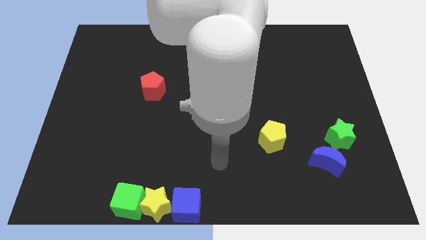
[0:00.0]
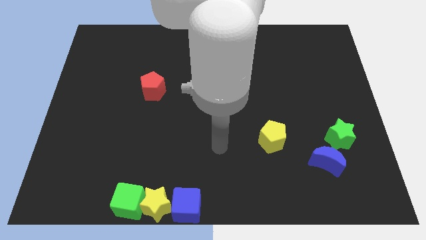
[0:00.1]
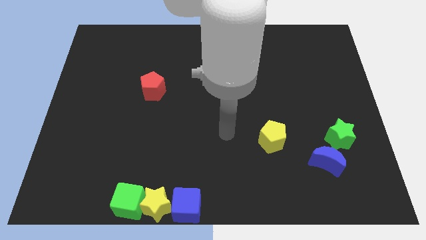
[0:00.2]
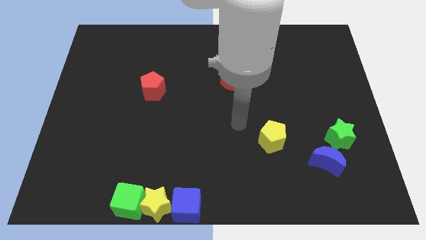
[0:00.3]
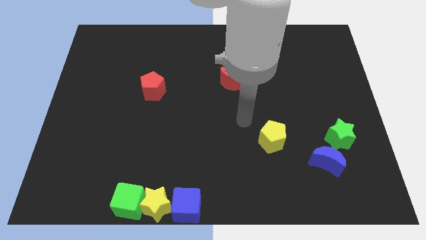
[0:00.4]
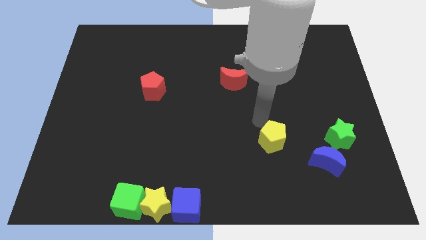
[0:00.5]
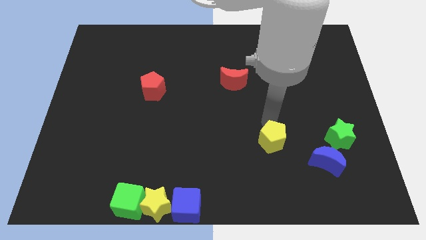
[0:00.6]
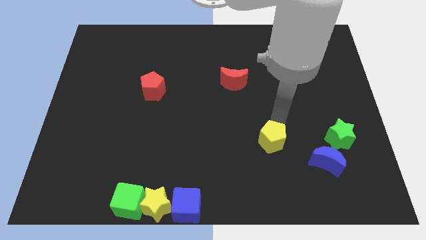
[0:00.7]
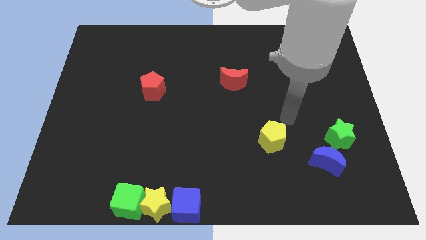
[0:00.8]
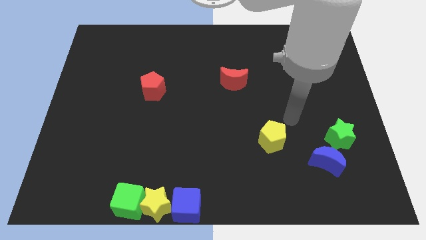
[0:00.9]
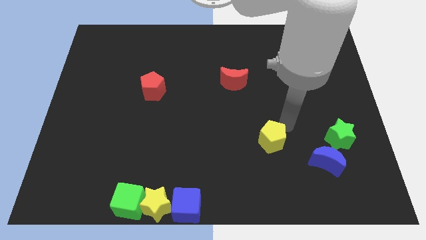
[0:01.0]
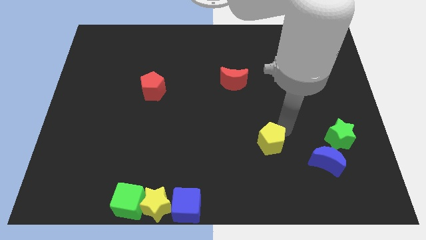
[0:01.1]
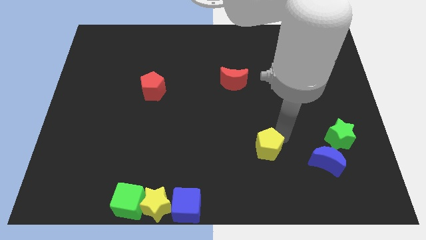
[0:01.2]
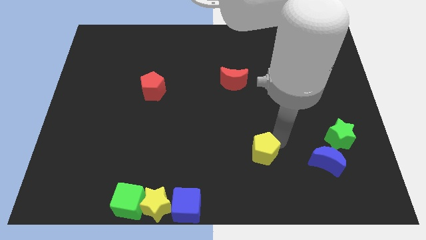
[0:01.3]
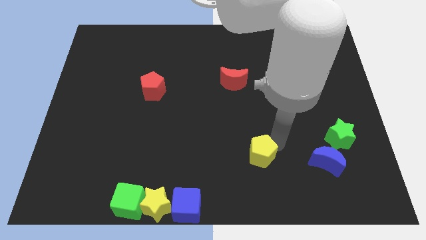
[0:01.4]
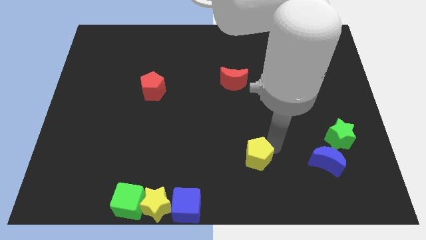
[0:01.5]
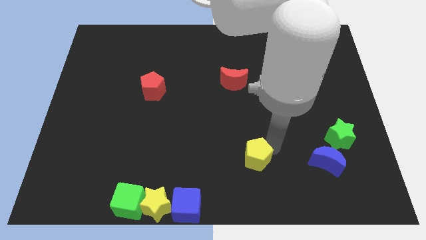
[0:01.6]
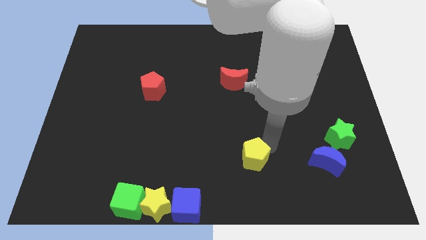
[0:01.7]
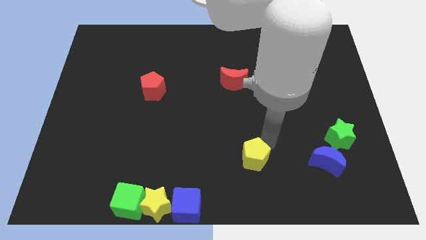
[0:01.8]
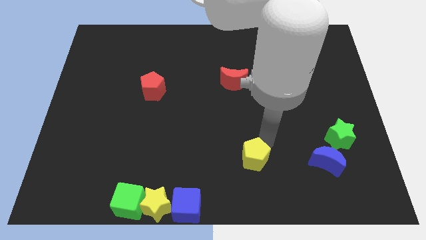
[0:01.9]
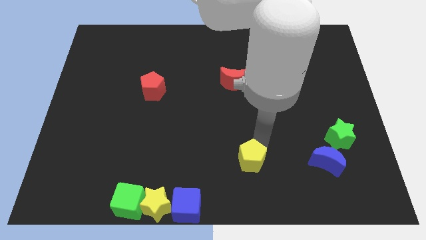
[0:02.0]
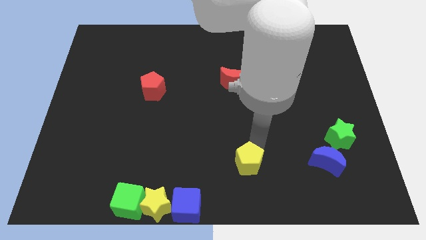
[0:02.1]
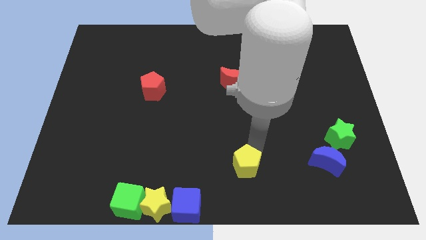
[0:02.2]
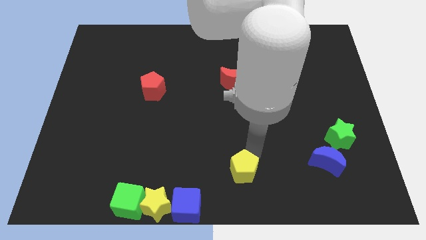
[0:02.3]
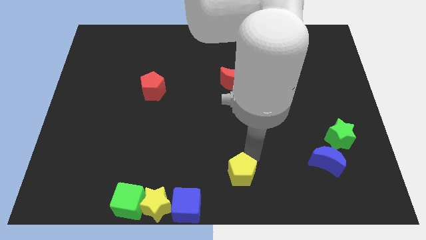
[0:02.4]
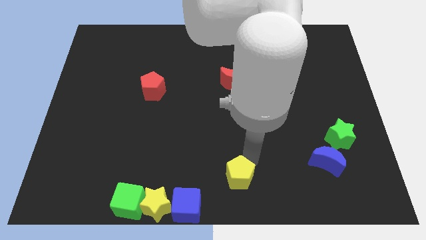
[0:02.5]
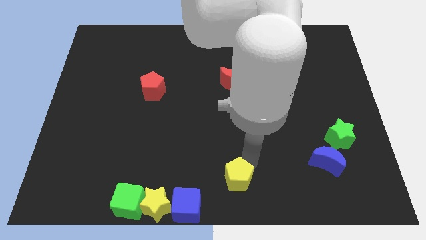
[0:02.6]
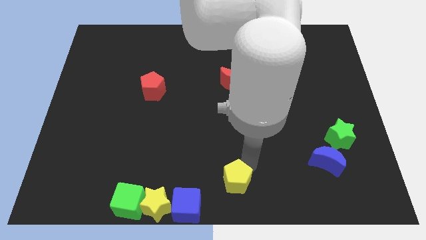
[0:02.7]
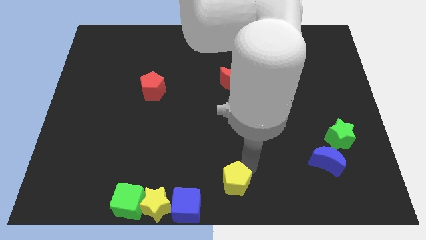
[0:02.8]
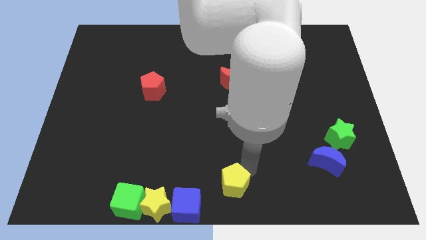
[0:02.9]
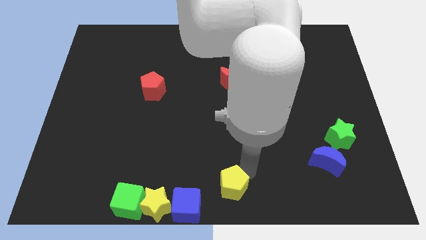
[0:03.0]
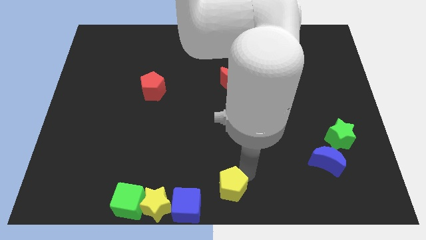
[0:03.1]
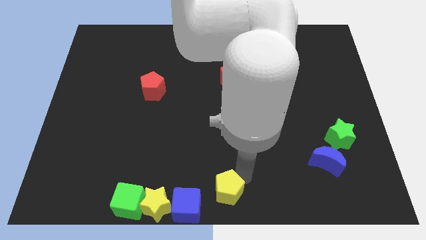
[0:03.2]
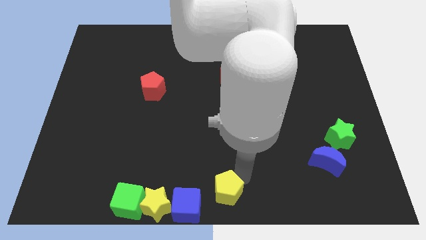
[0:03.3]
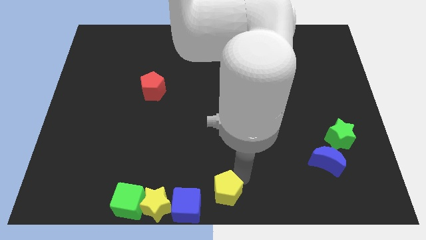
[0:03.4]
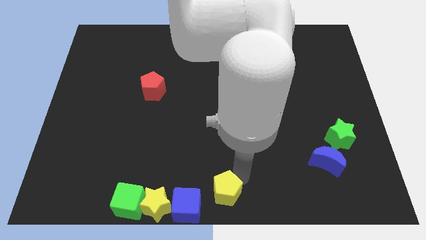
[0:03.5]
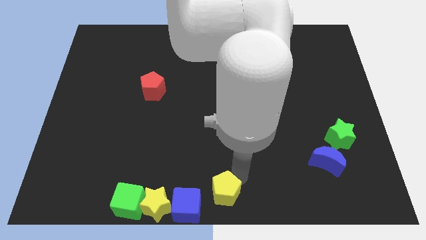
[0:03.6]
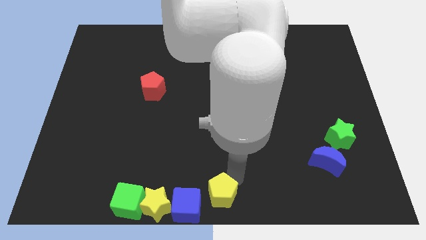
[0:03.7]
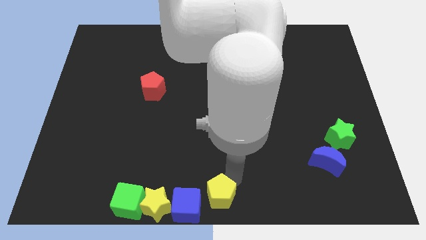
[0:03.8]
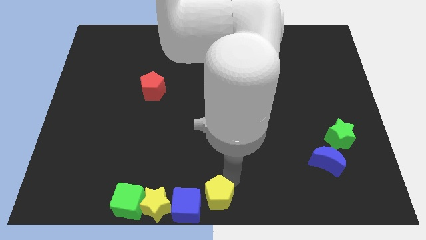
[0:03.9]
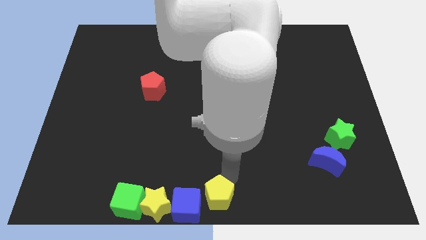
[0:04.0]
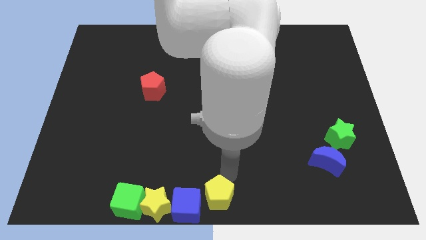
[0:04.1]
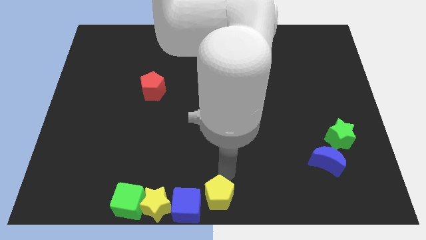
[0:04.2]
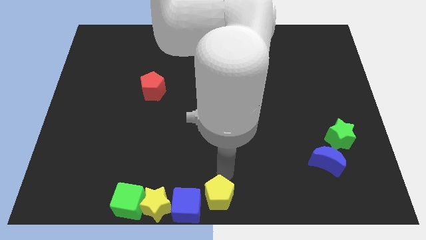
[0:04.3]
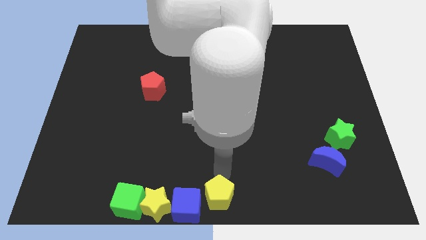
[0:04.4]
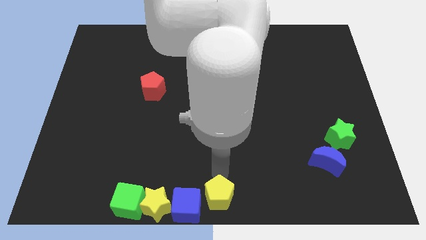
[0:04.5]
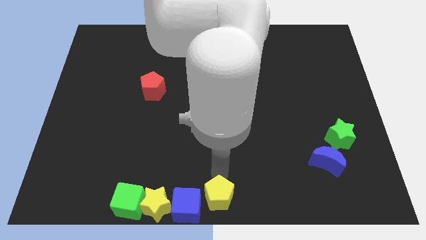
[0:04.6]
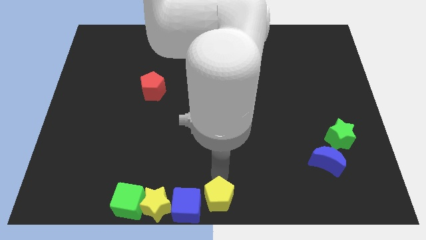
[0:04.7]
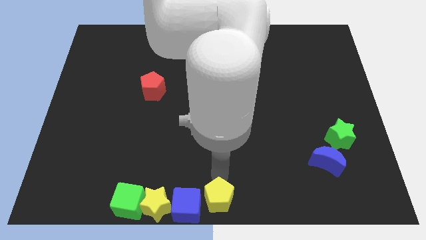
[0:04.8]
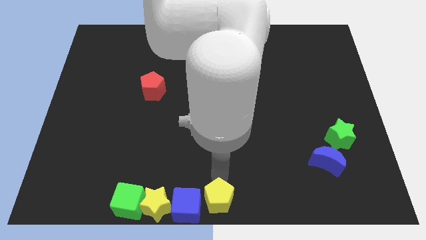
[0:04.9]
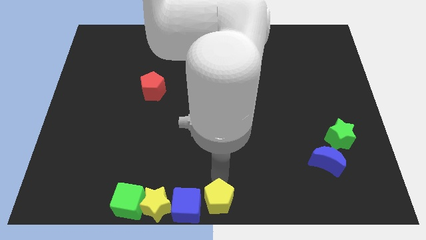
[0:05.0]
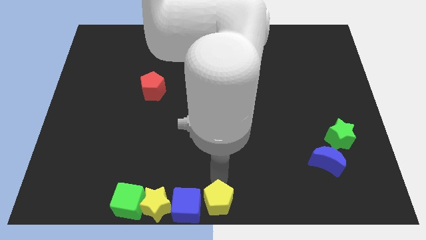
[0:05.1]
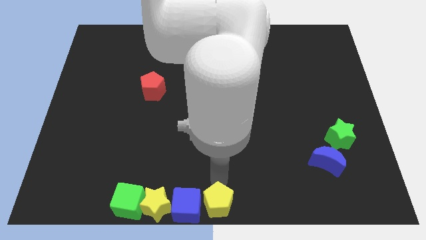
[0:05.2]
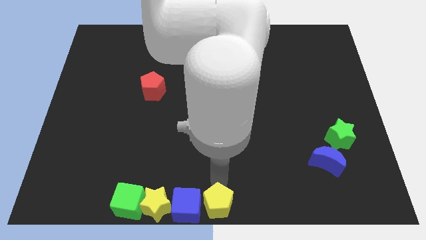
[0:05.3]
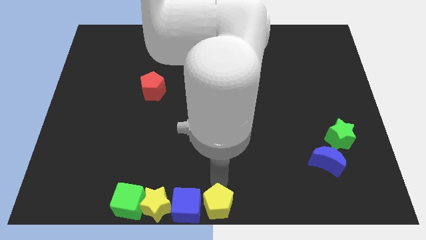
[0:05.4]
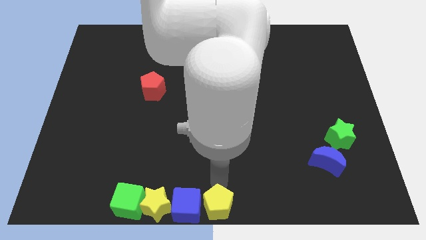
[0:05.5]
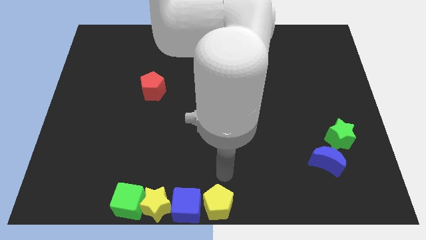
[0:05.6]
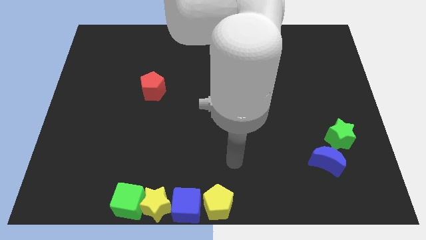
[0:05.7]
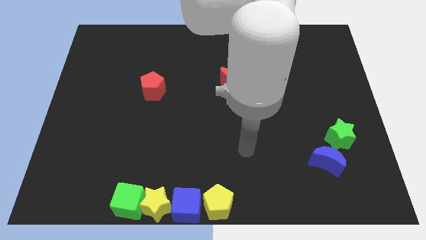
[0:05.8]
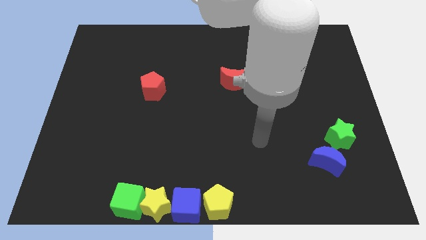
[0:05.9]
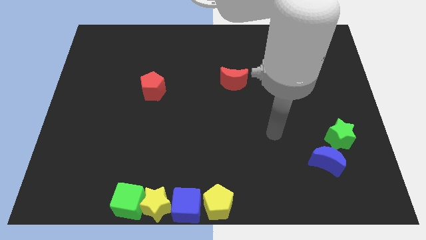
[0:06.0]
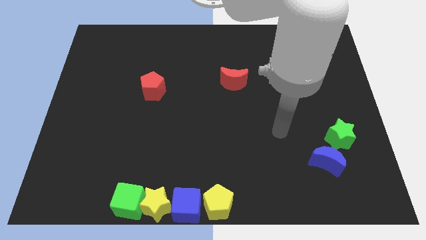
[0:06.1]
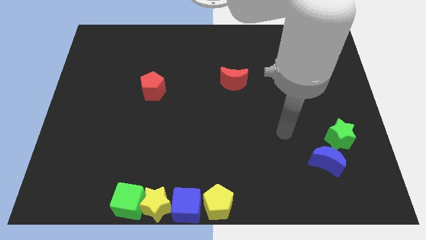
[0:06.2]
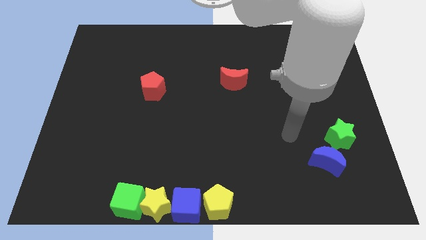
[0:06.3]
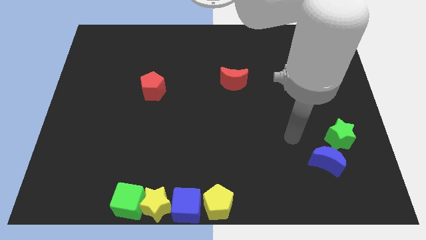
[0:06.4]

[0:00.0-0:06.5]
place the yellow pentagon at the bottom center of the board

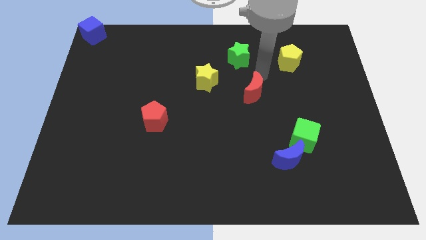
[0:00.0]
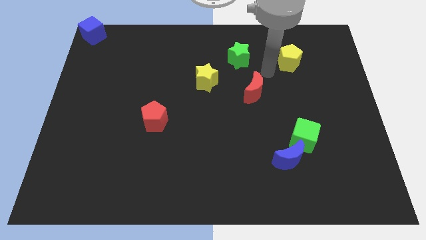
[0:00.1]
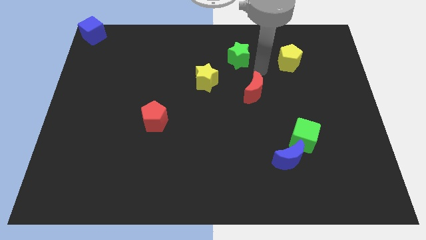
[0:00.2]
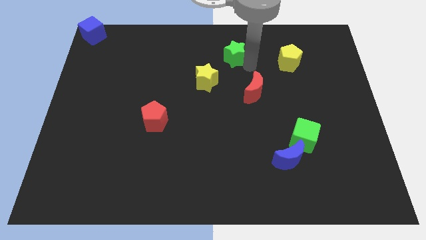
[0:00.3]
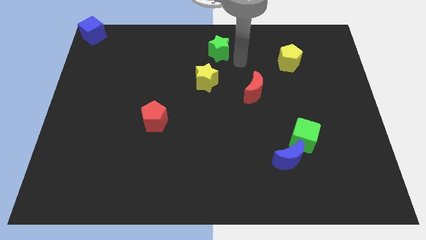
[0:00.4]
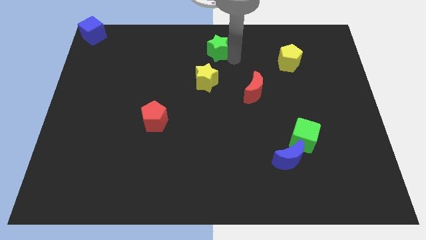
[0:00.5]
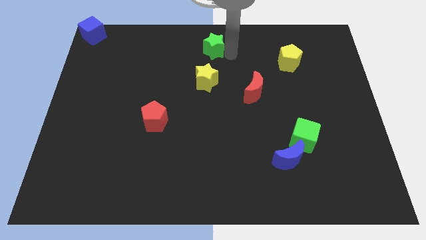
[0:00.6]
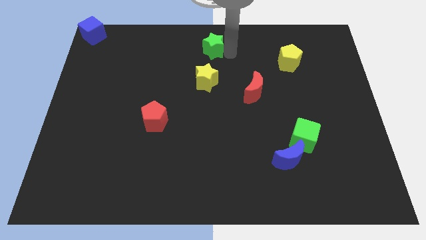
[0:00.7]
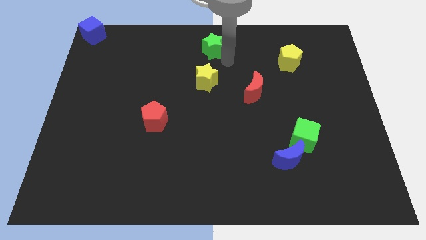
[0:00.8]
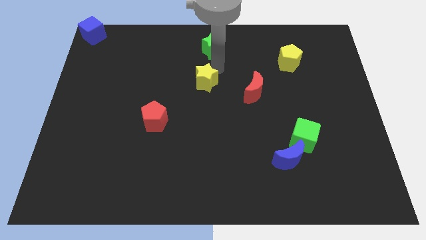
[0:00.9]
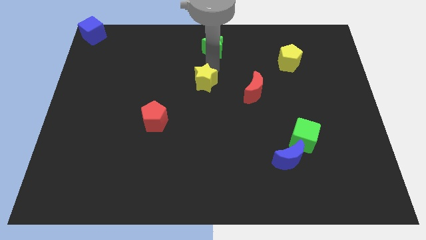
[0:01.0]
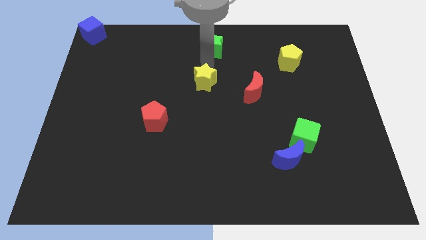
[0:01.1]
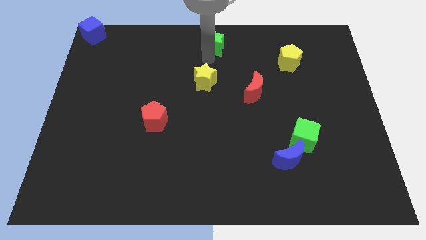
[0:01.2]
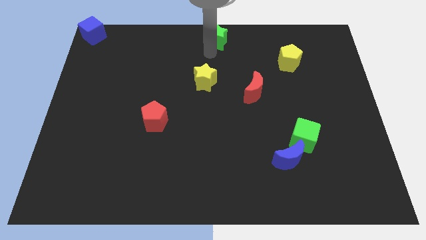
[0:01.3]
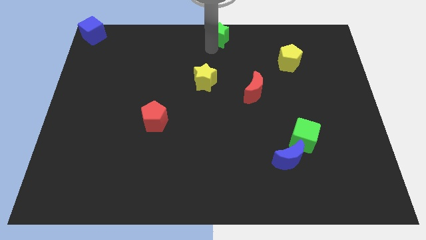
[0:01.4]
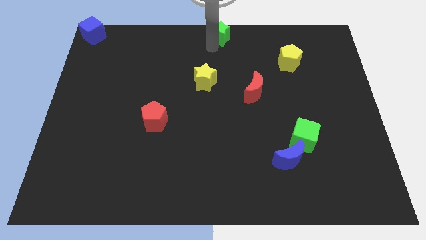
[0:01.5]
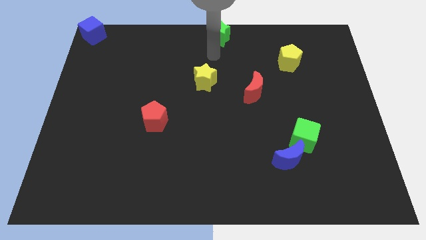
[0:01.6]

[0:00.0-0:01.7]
move the green star to the top center of the board

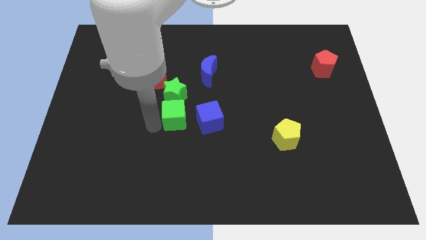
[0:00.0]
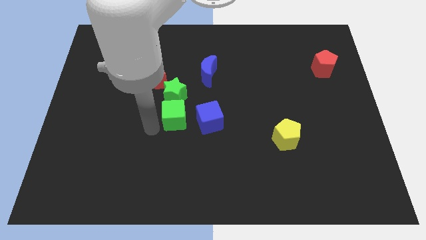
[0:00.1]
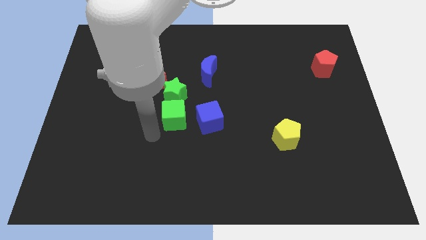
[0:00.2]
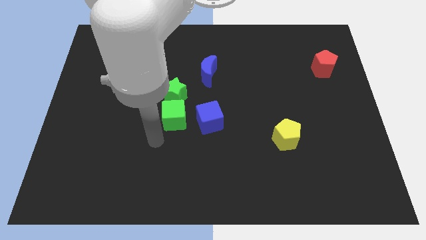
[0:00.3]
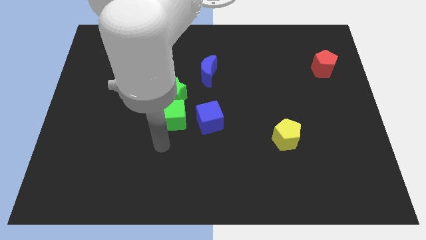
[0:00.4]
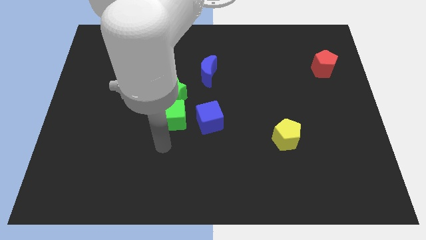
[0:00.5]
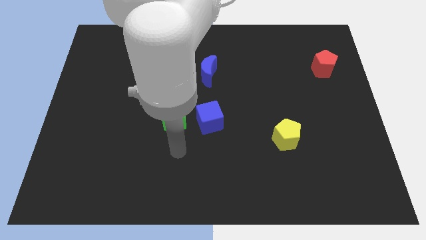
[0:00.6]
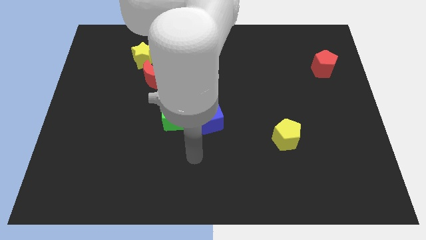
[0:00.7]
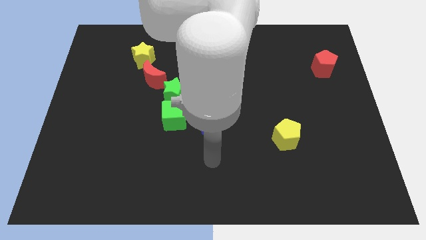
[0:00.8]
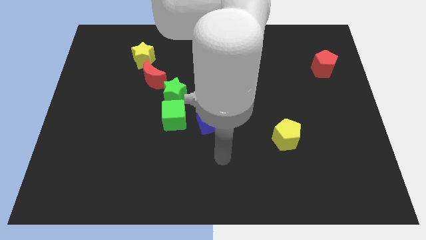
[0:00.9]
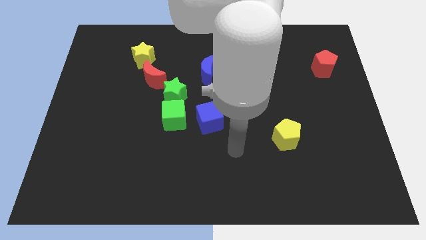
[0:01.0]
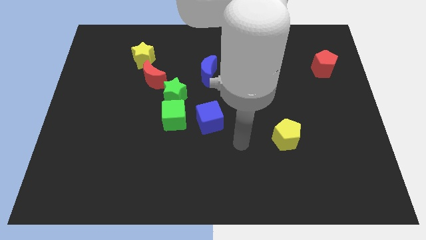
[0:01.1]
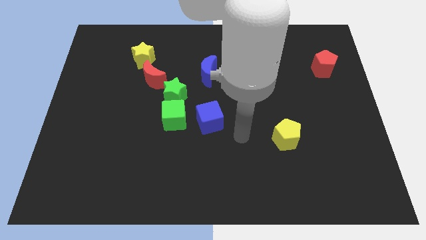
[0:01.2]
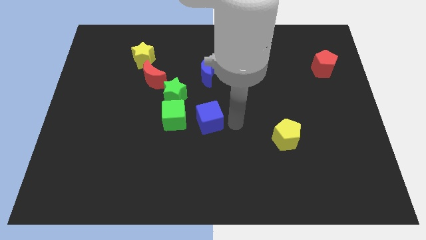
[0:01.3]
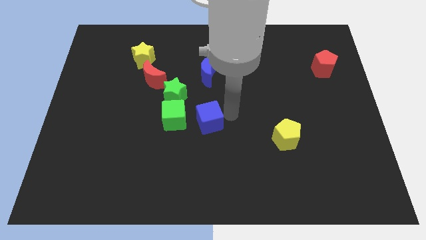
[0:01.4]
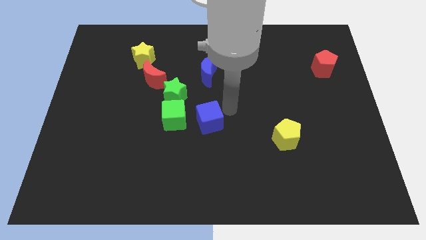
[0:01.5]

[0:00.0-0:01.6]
point your arm at the right side of the blue cube
